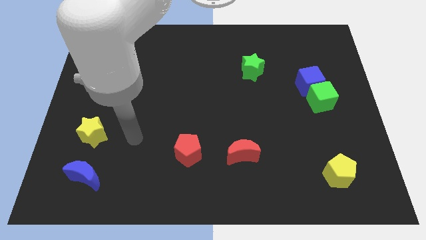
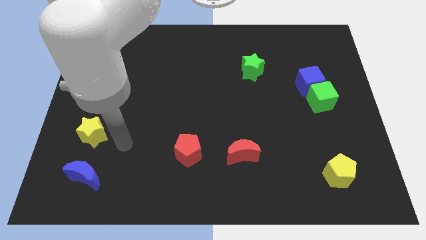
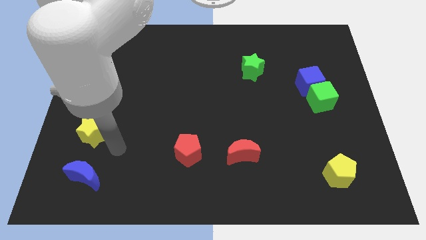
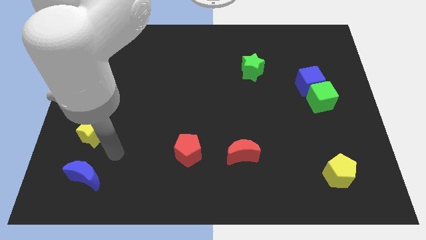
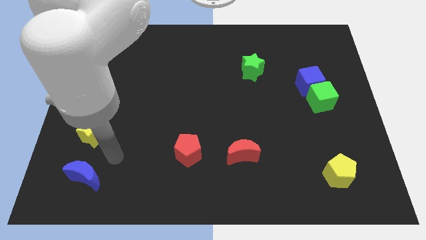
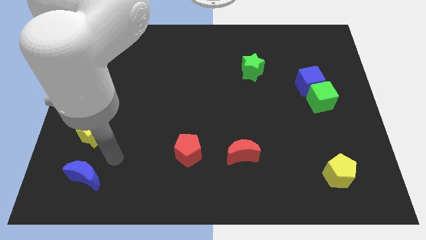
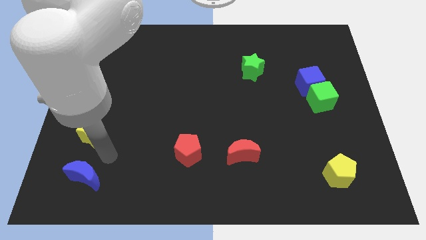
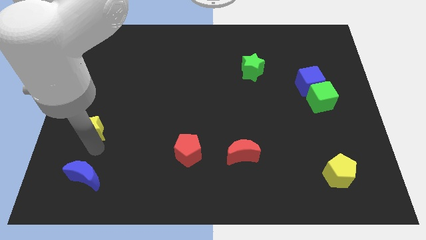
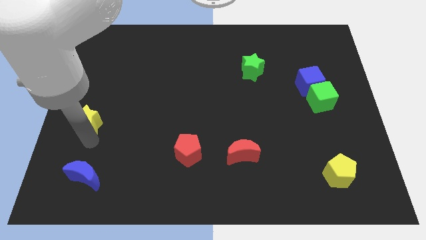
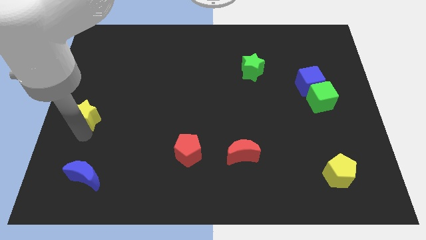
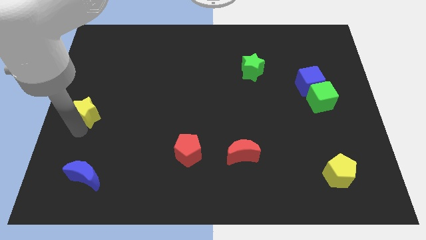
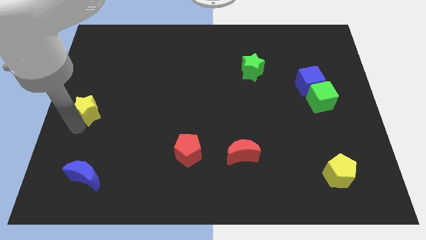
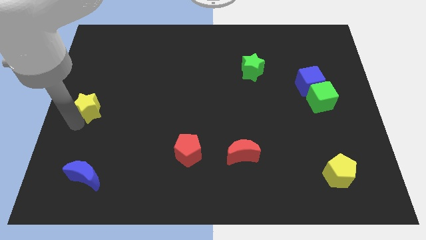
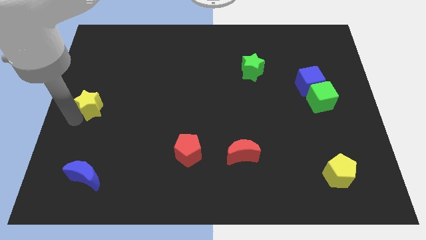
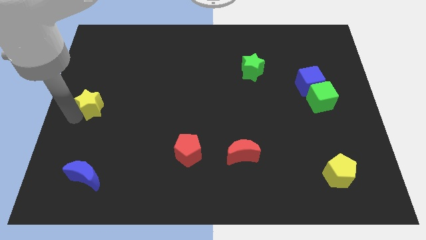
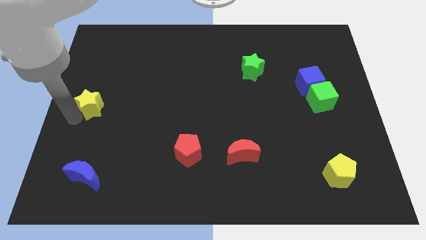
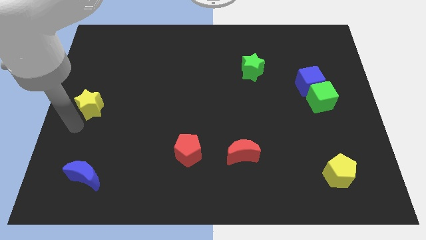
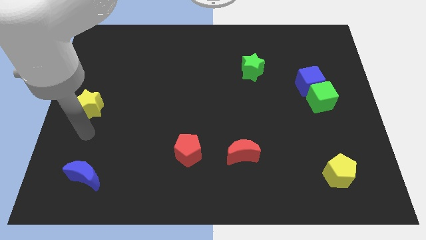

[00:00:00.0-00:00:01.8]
slightly push the yellow star towards up

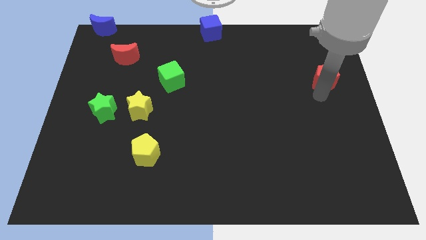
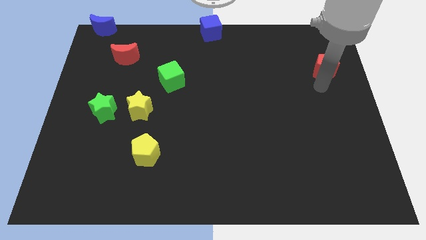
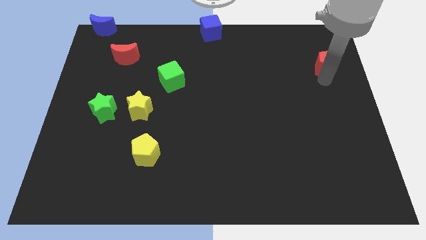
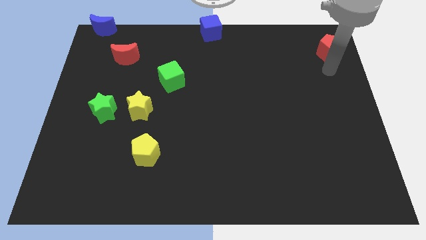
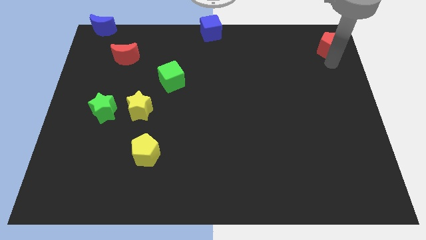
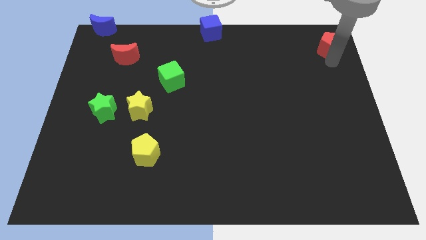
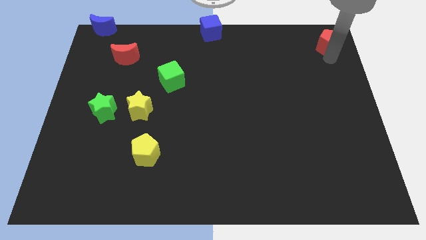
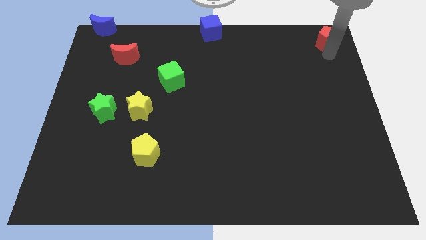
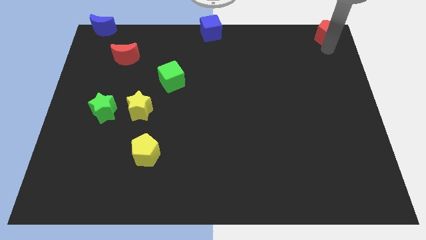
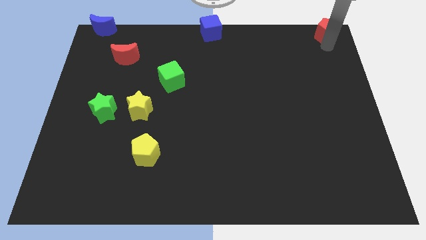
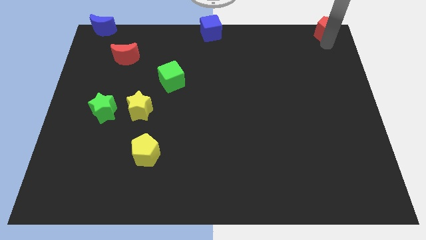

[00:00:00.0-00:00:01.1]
push the red pentagon to the top right side

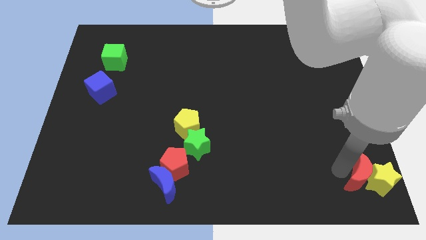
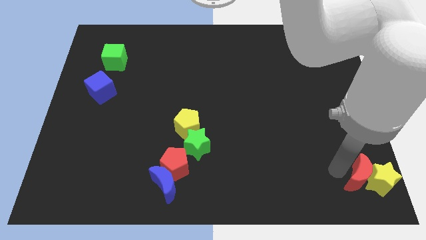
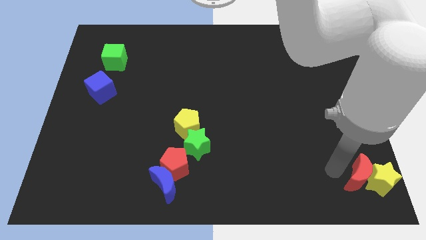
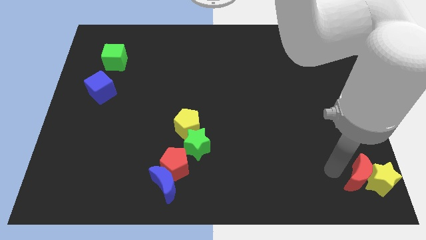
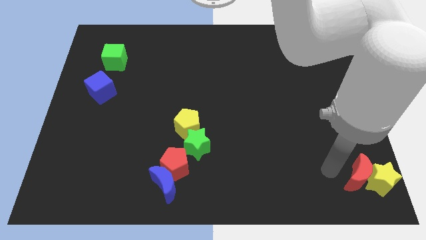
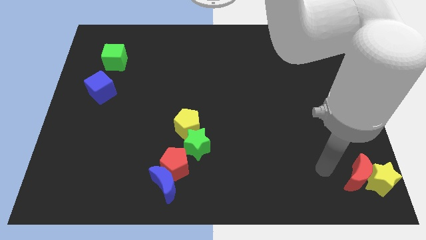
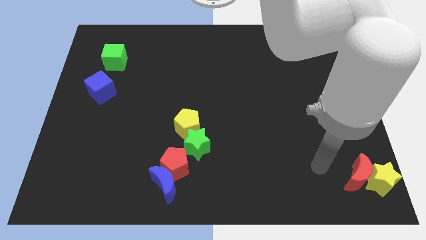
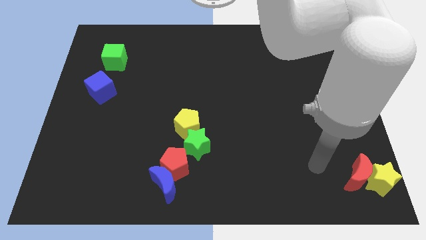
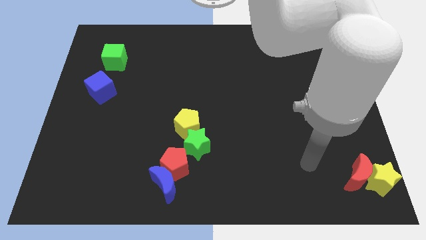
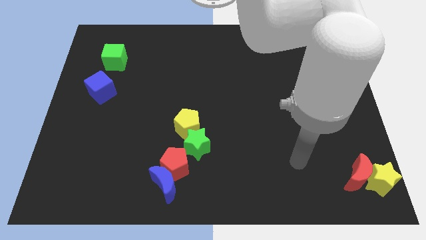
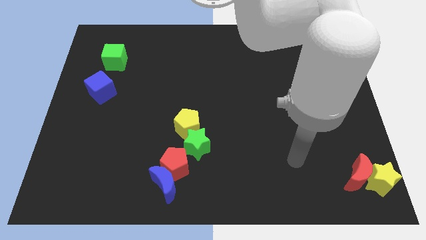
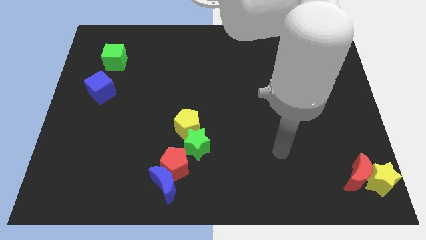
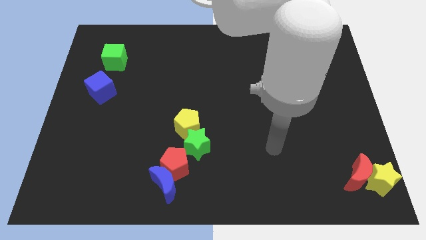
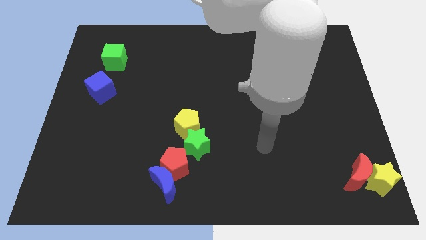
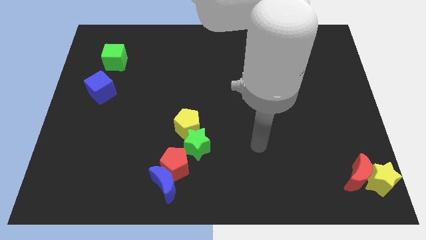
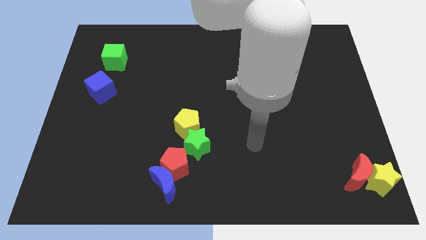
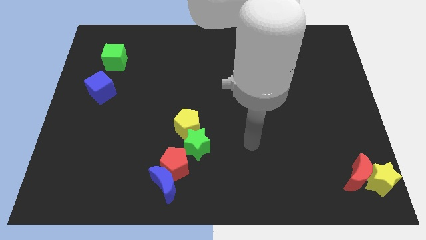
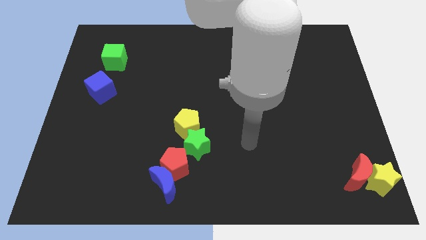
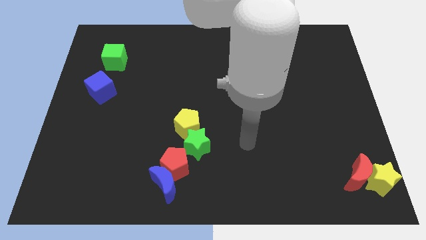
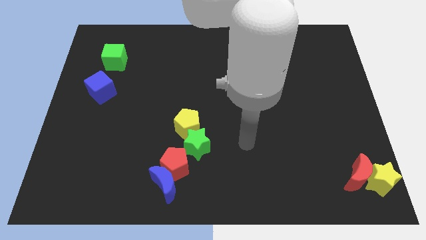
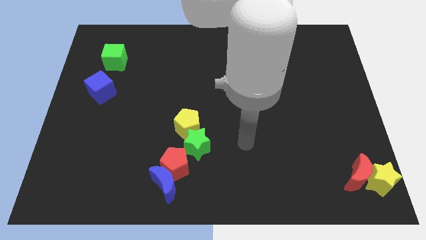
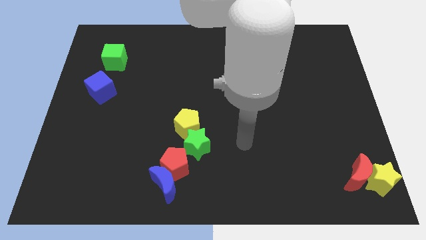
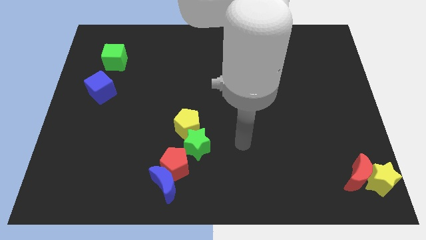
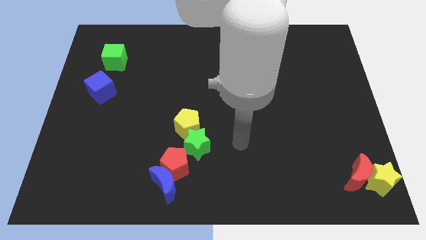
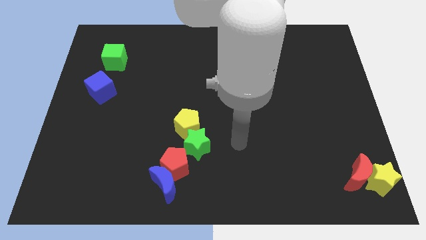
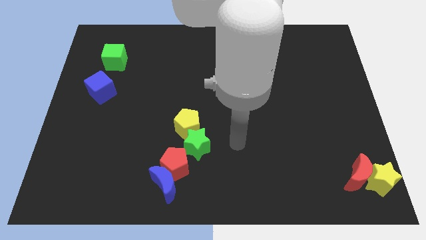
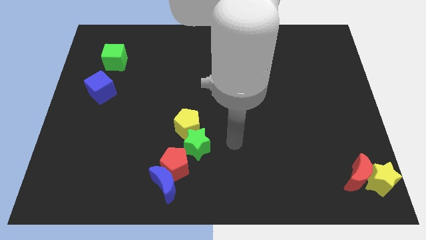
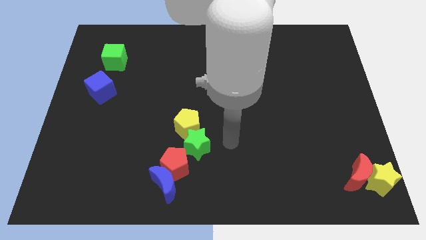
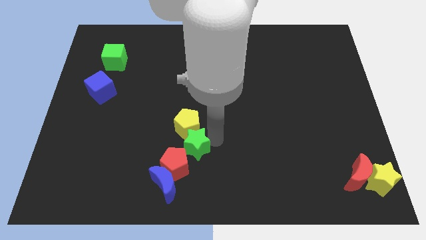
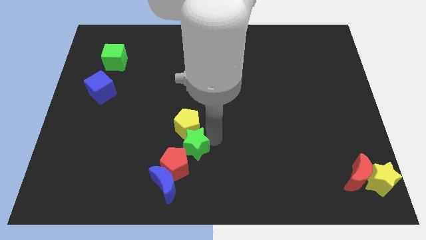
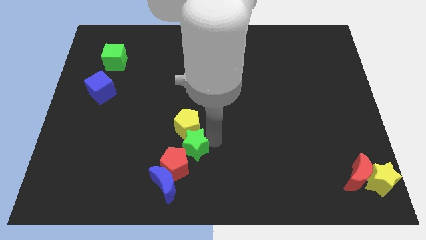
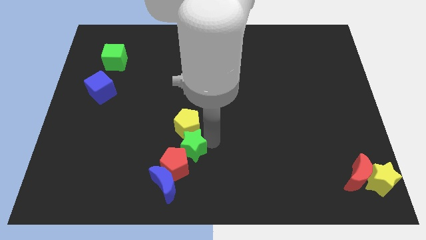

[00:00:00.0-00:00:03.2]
place your arm to the right of green star

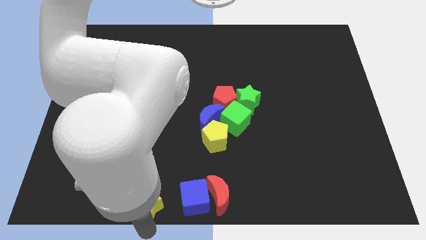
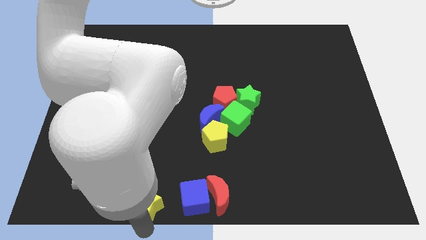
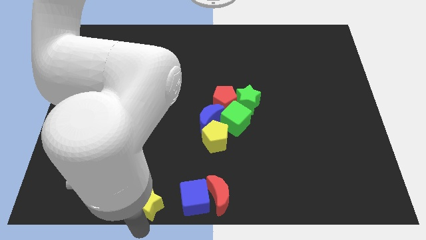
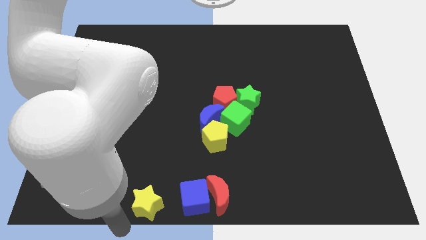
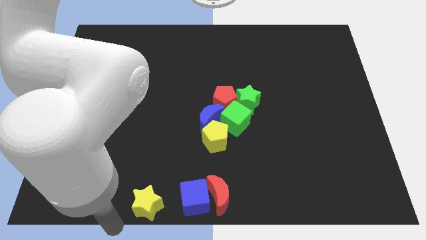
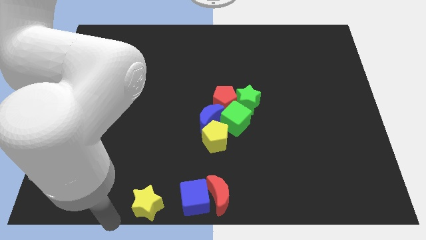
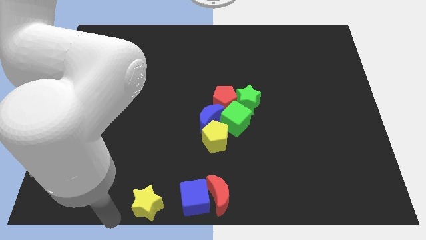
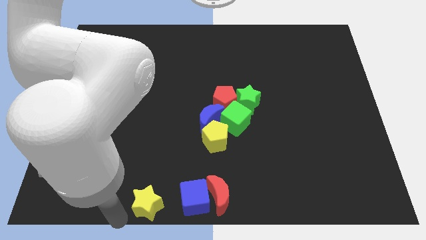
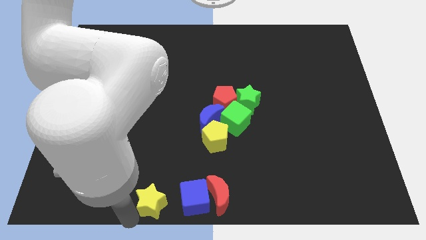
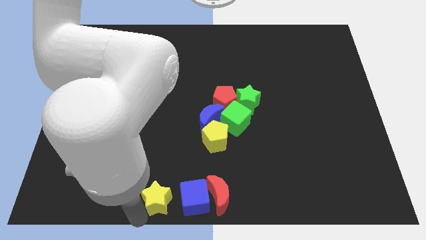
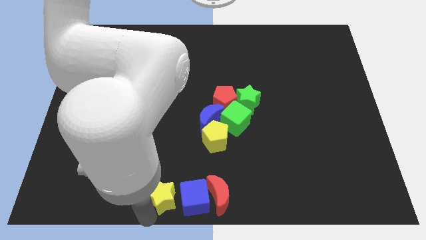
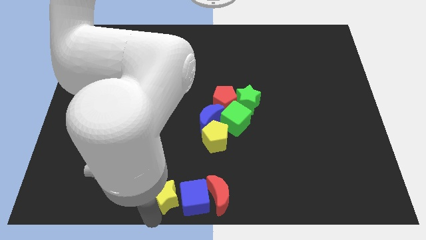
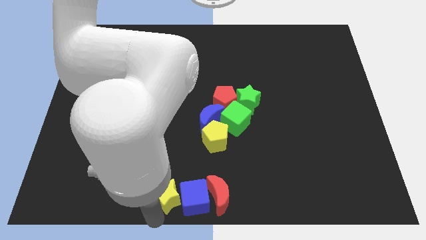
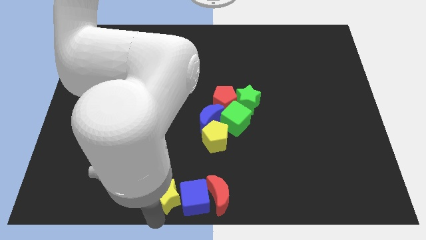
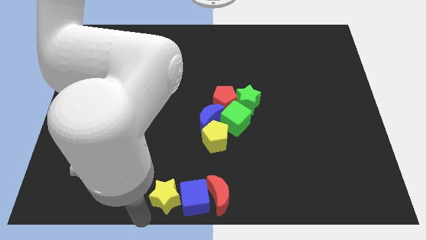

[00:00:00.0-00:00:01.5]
place the yellow star to the left side of blue

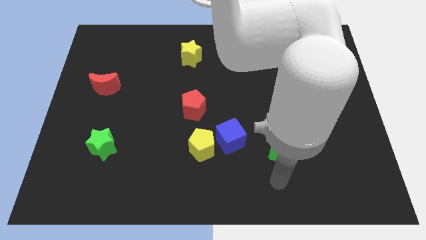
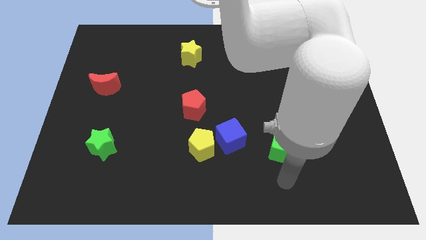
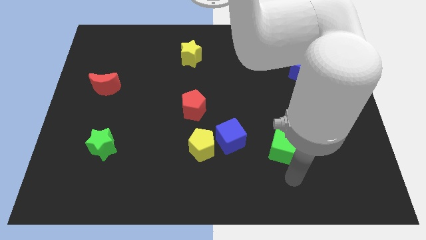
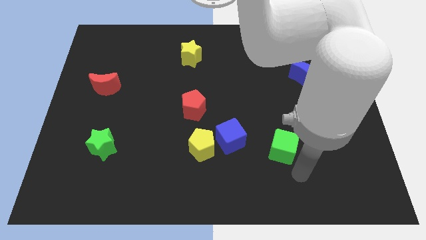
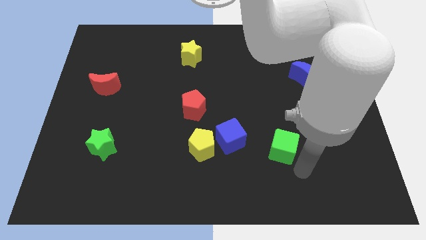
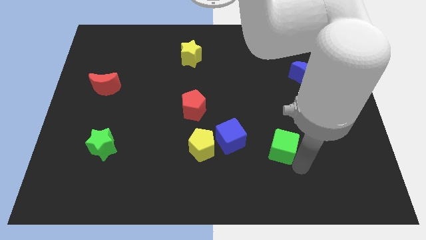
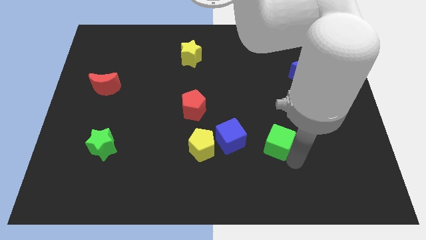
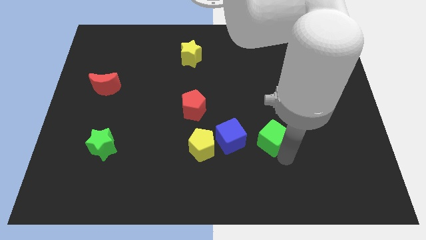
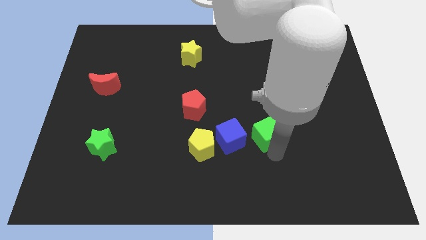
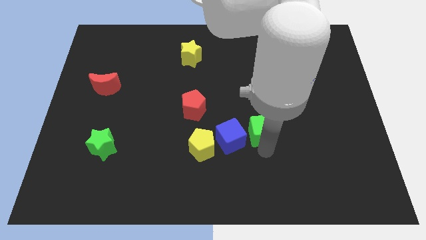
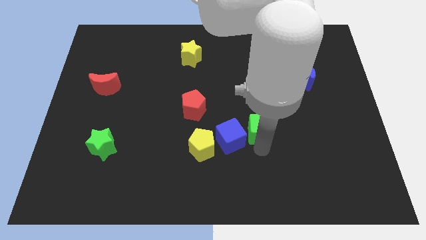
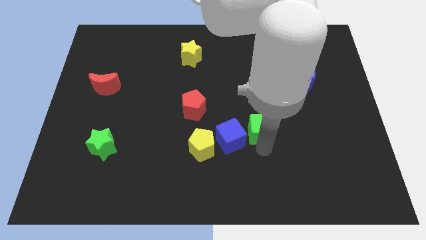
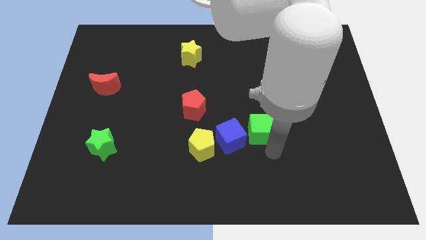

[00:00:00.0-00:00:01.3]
move the green cube right towards the blue cube

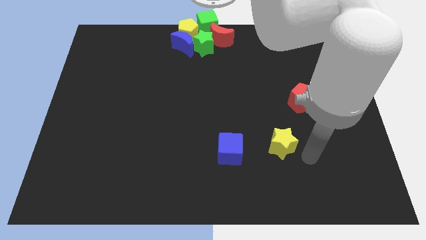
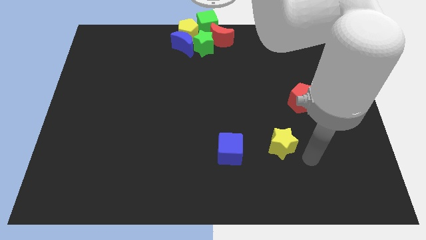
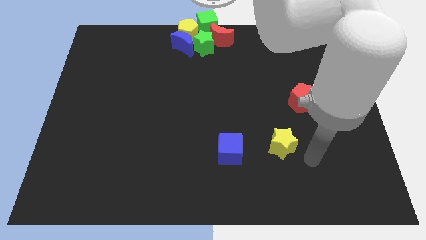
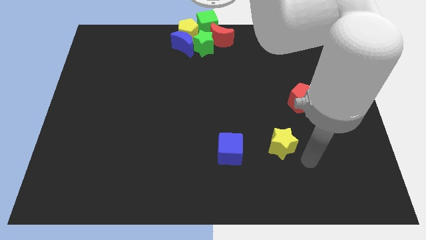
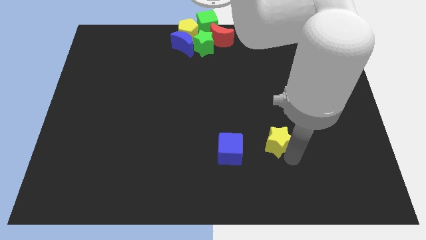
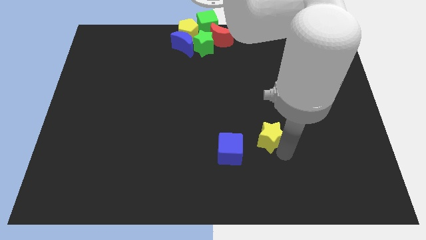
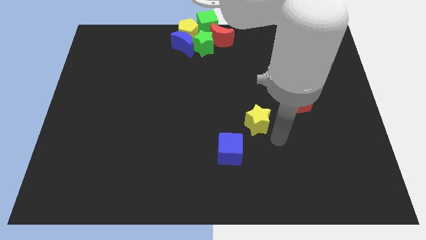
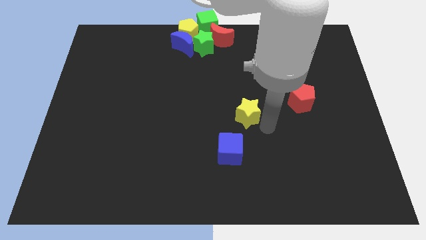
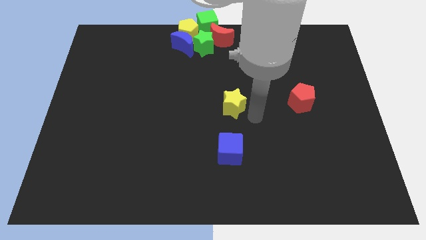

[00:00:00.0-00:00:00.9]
place the yellow star to the top of the blue cube
